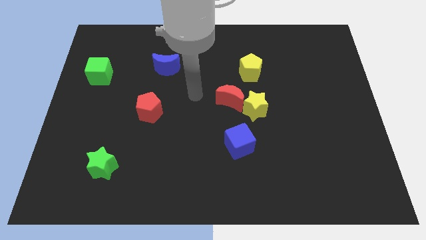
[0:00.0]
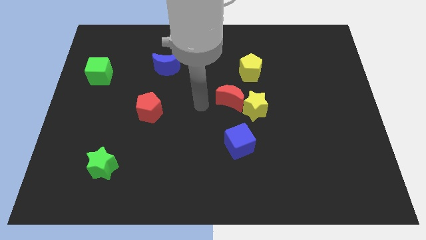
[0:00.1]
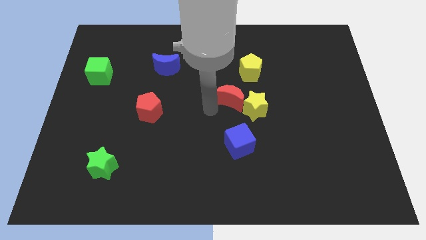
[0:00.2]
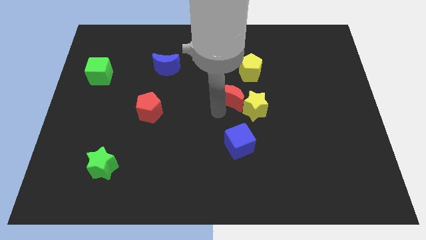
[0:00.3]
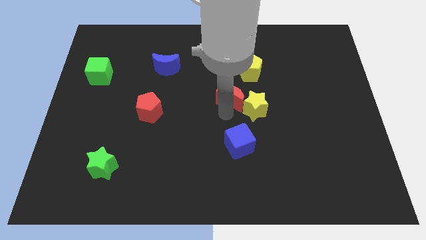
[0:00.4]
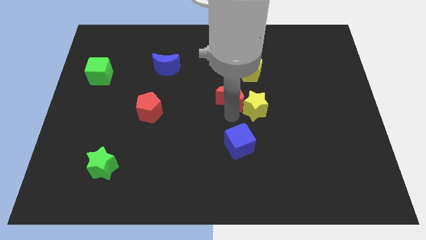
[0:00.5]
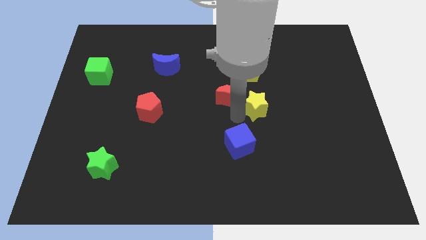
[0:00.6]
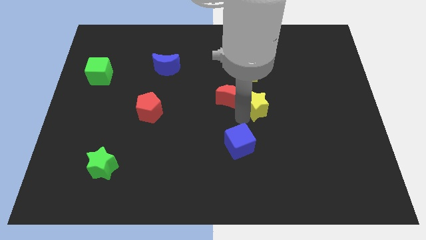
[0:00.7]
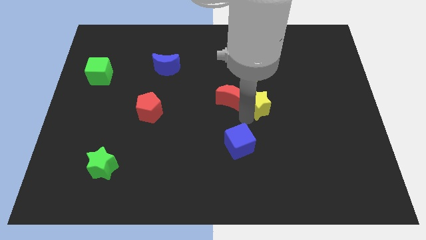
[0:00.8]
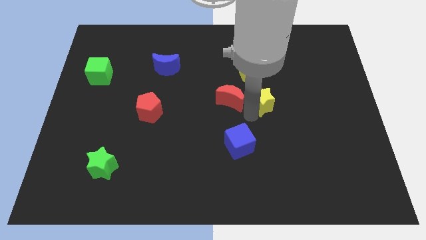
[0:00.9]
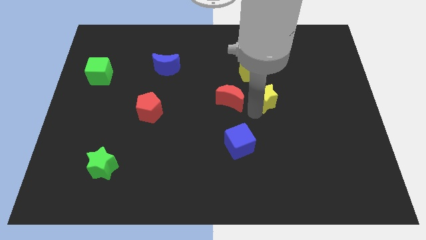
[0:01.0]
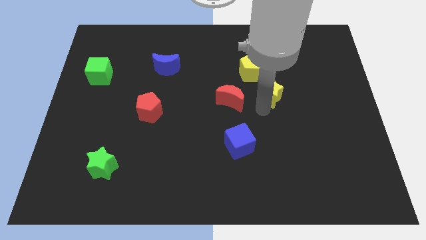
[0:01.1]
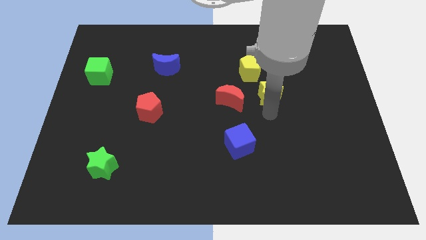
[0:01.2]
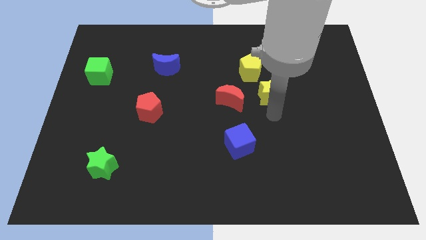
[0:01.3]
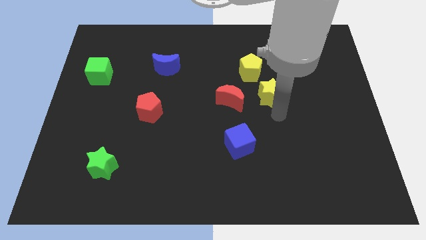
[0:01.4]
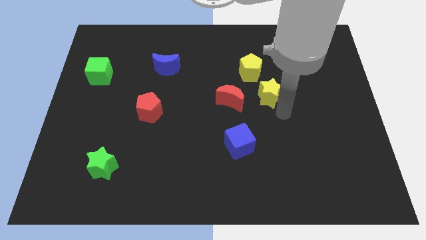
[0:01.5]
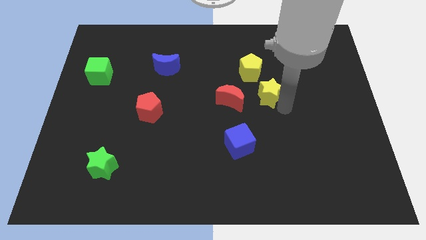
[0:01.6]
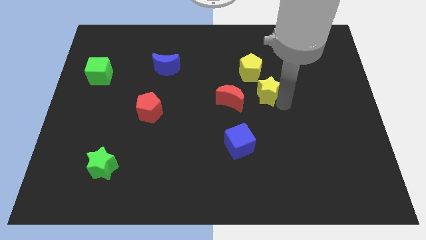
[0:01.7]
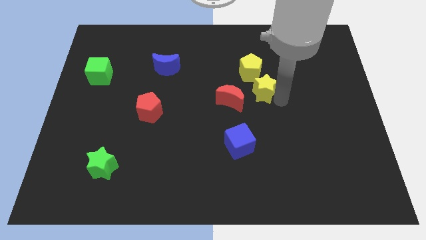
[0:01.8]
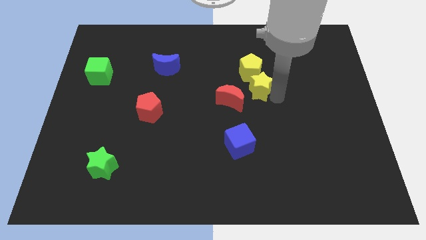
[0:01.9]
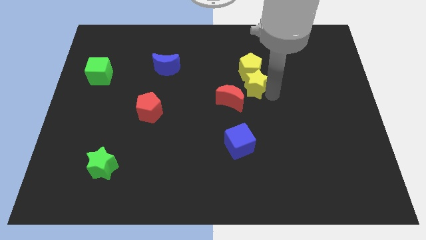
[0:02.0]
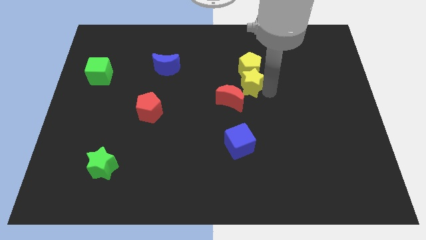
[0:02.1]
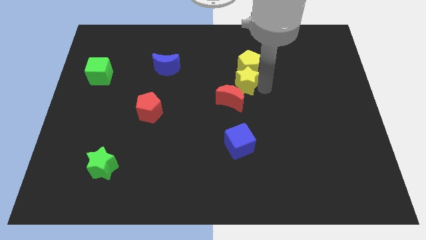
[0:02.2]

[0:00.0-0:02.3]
push the yellow star close to the yellow pentagon

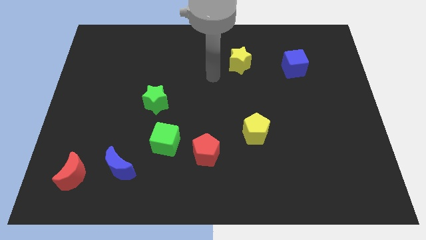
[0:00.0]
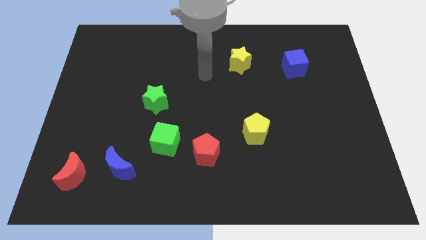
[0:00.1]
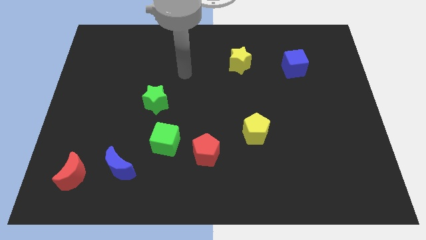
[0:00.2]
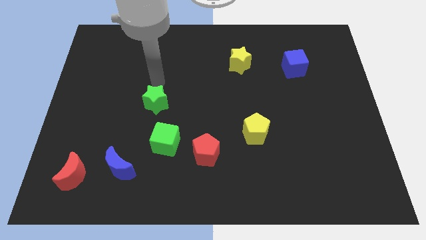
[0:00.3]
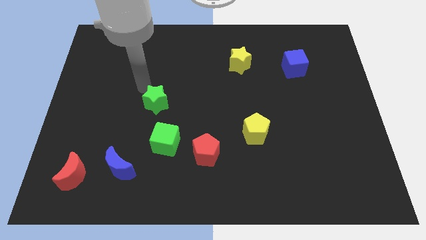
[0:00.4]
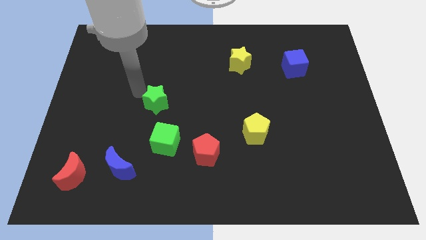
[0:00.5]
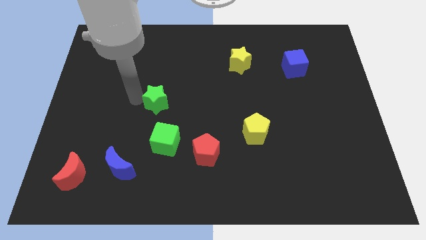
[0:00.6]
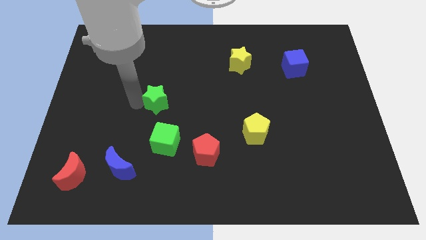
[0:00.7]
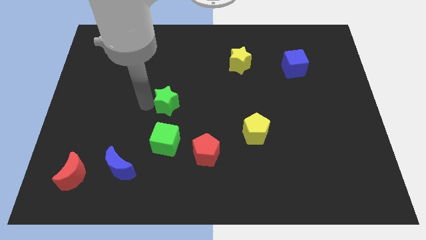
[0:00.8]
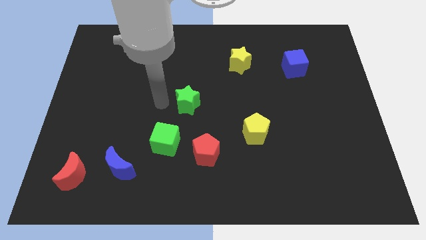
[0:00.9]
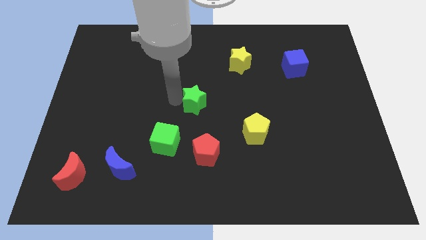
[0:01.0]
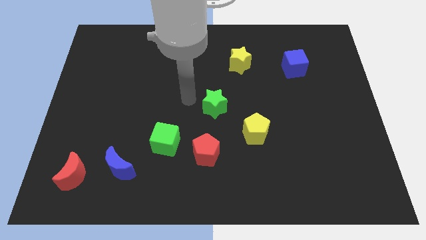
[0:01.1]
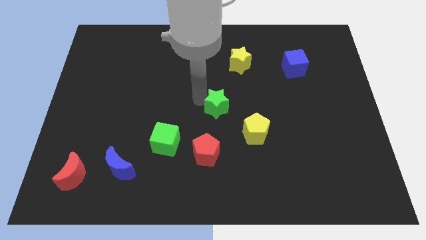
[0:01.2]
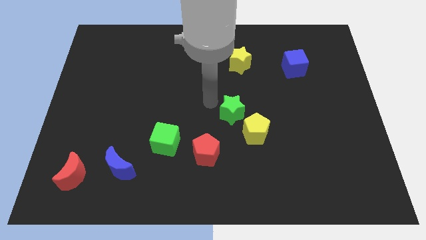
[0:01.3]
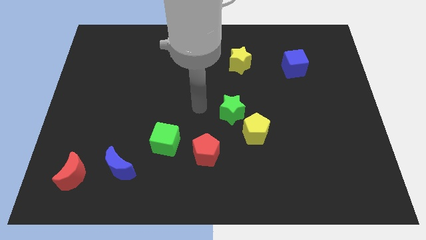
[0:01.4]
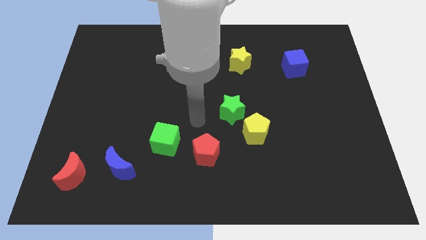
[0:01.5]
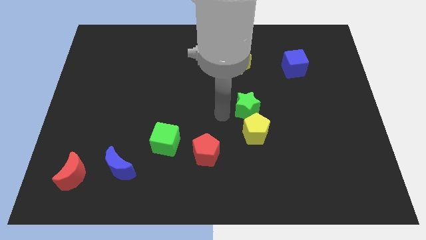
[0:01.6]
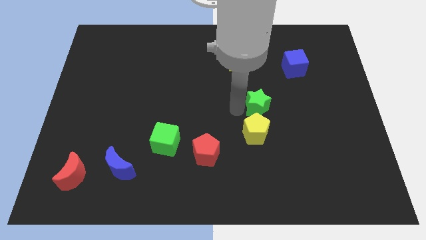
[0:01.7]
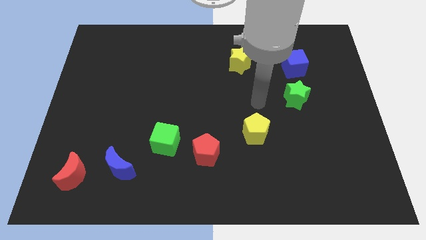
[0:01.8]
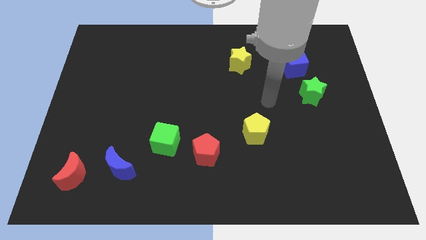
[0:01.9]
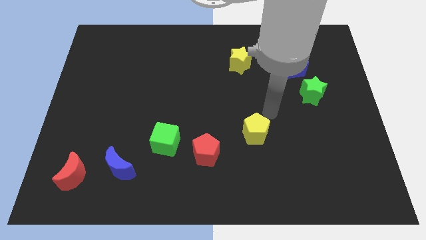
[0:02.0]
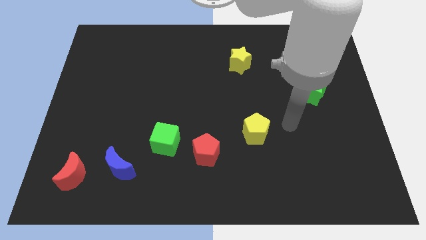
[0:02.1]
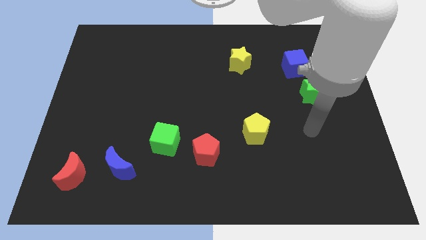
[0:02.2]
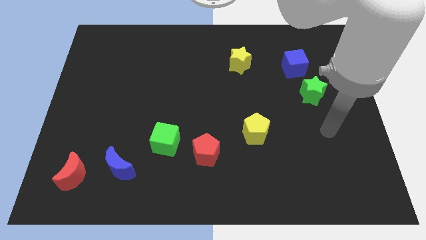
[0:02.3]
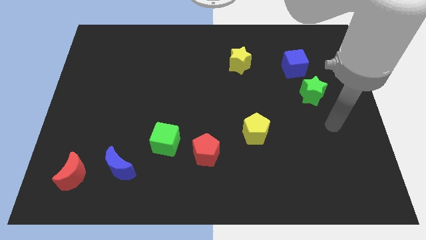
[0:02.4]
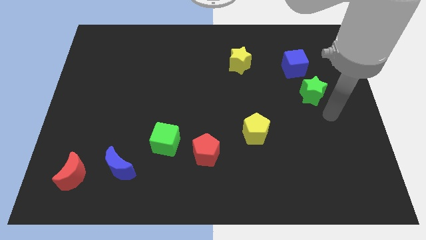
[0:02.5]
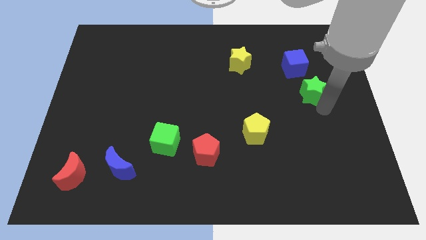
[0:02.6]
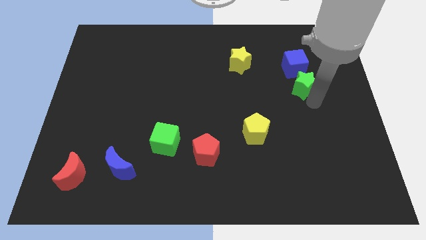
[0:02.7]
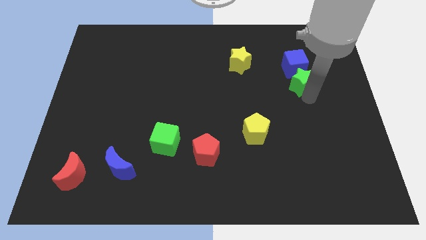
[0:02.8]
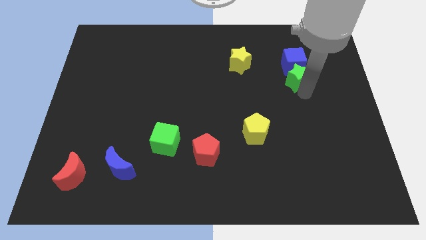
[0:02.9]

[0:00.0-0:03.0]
move the green star to the blue cube

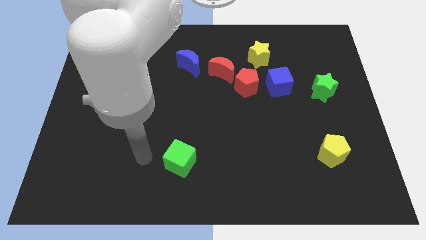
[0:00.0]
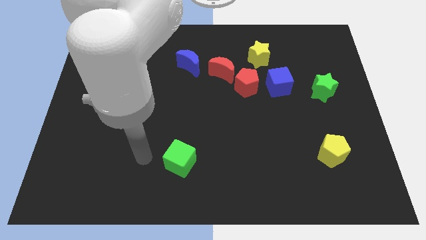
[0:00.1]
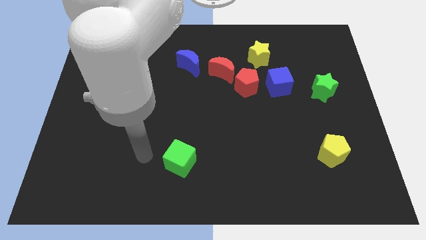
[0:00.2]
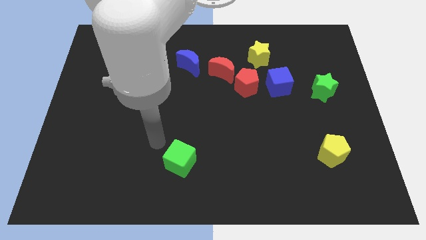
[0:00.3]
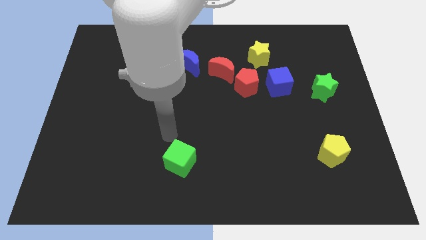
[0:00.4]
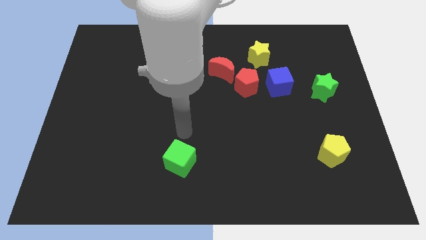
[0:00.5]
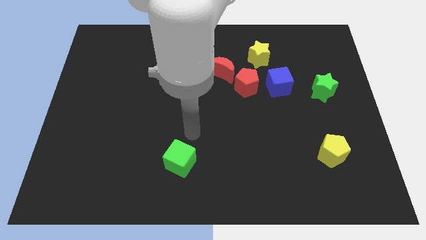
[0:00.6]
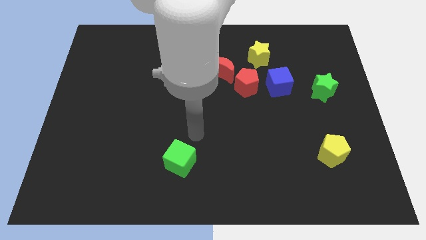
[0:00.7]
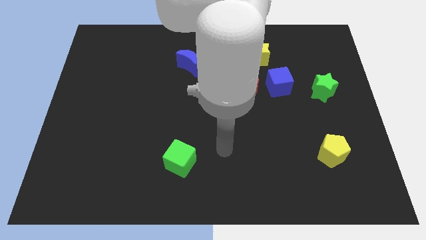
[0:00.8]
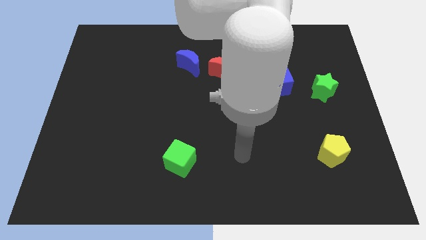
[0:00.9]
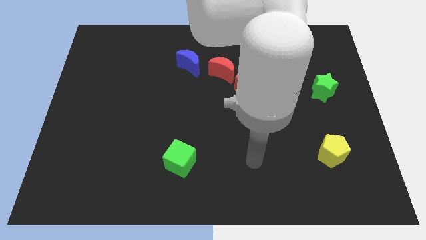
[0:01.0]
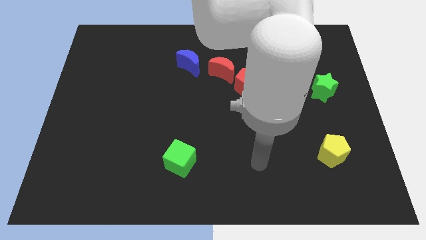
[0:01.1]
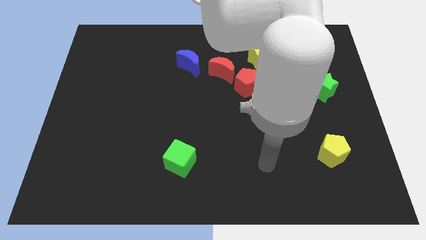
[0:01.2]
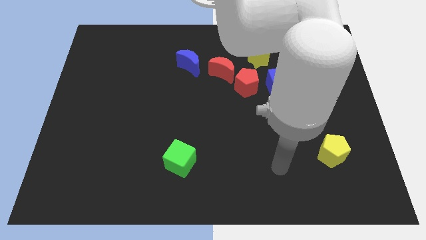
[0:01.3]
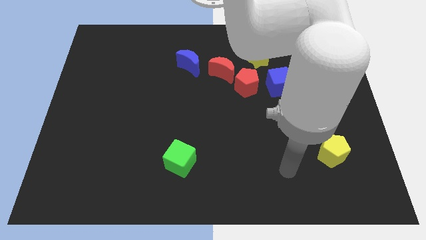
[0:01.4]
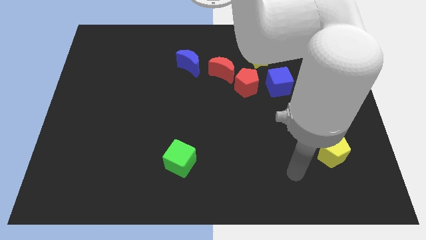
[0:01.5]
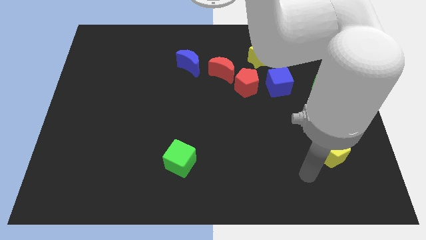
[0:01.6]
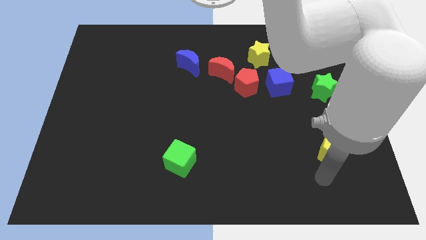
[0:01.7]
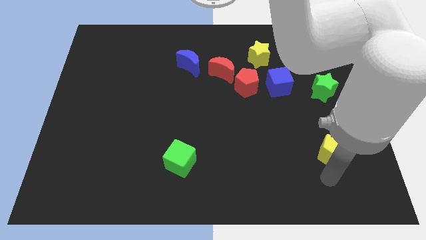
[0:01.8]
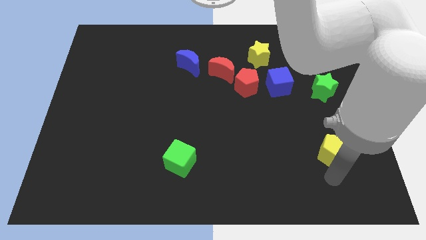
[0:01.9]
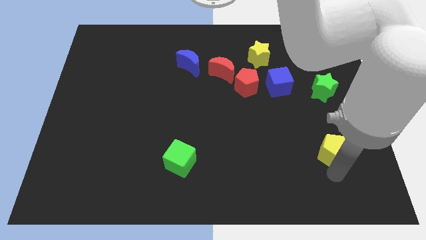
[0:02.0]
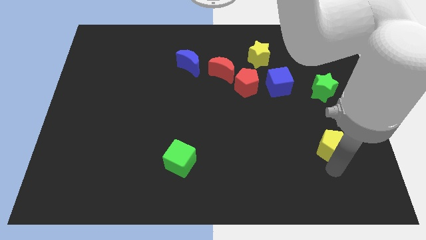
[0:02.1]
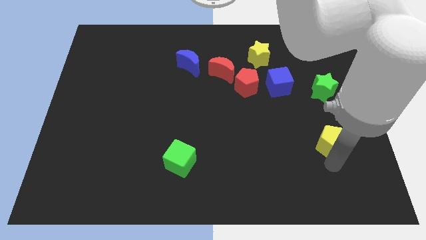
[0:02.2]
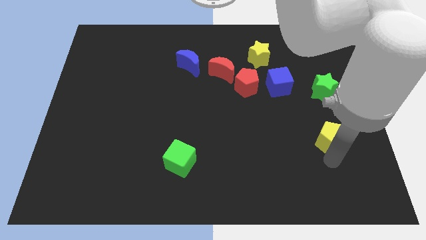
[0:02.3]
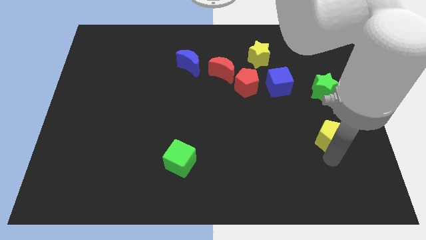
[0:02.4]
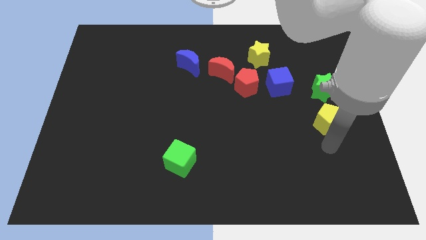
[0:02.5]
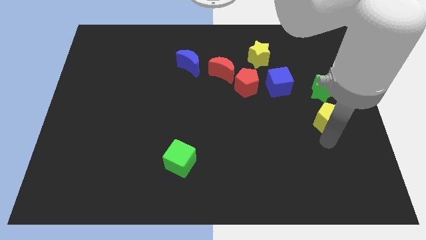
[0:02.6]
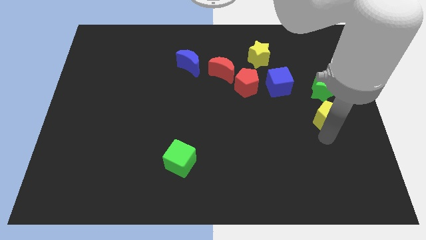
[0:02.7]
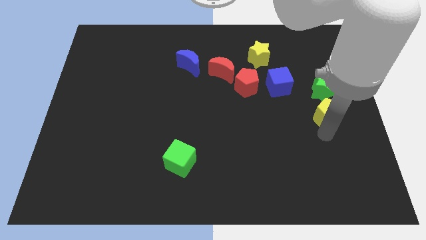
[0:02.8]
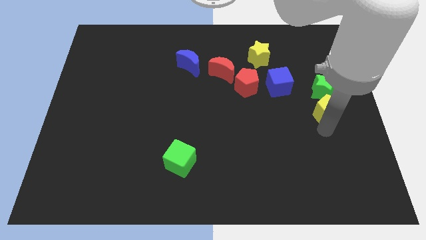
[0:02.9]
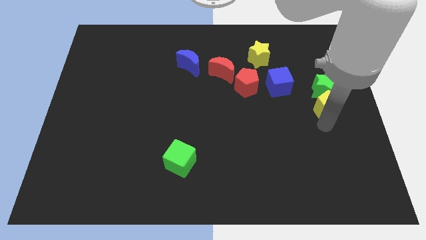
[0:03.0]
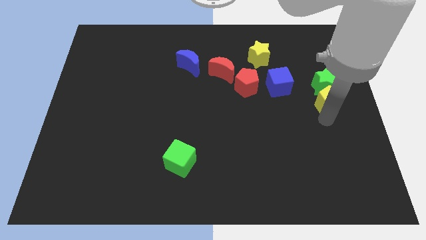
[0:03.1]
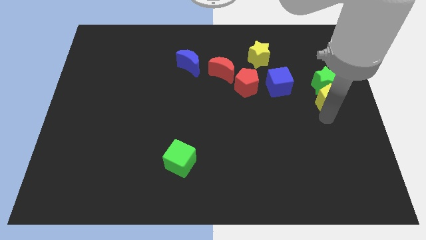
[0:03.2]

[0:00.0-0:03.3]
slide the yellow pentagon towards the green star
